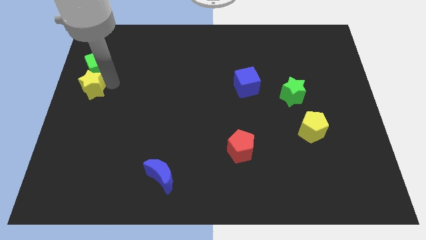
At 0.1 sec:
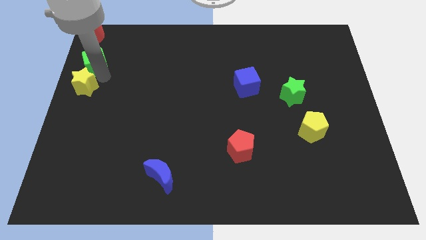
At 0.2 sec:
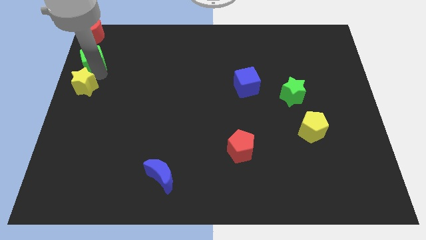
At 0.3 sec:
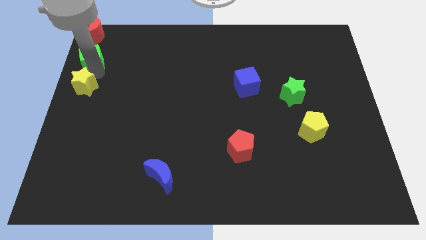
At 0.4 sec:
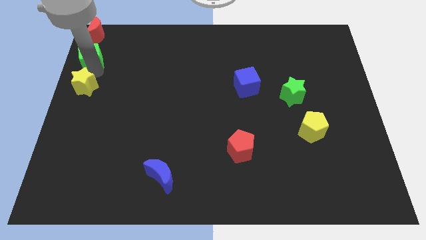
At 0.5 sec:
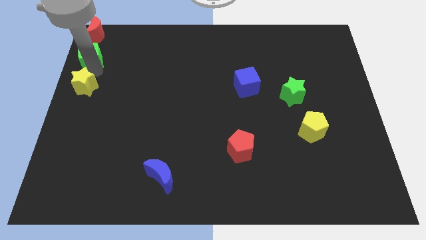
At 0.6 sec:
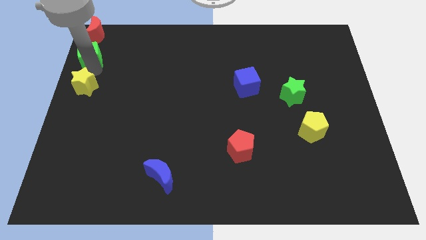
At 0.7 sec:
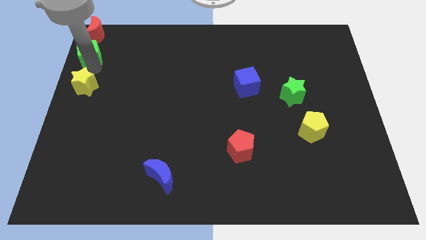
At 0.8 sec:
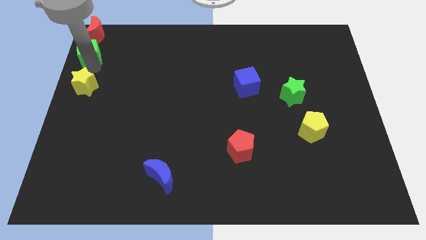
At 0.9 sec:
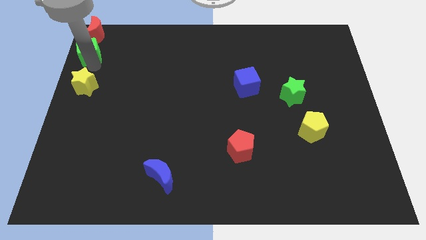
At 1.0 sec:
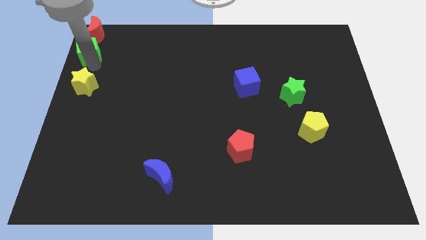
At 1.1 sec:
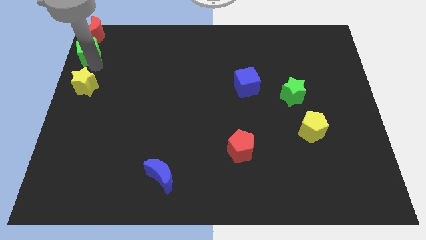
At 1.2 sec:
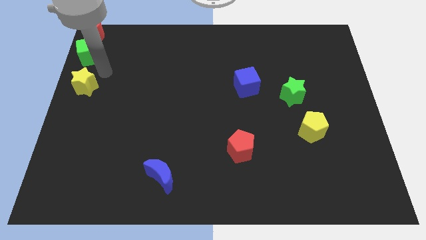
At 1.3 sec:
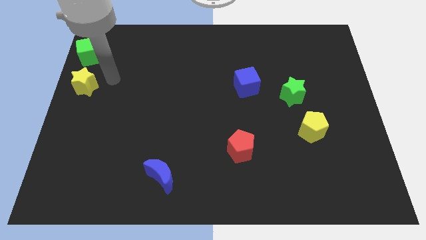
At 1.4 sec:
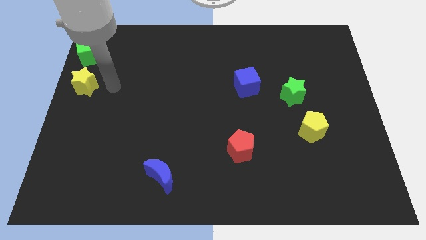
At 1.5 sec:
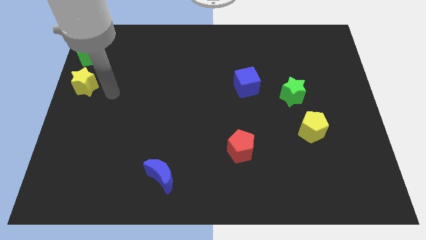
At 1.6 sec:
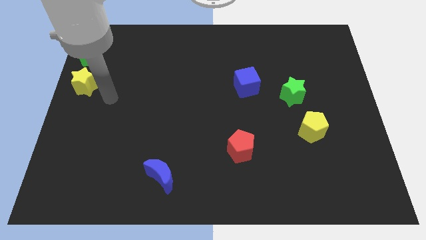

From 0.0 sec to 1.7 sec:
drag the green cube and place it below the red moon

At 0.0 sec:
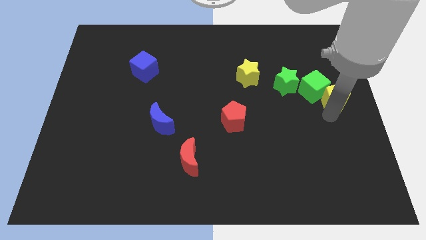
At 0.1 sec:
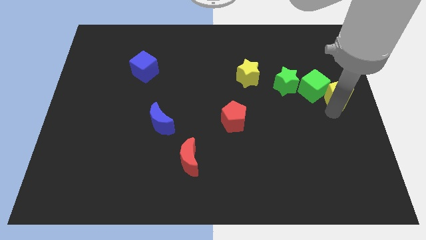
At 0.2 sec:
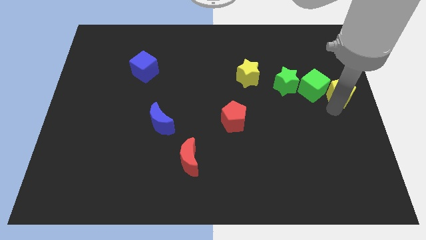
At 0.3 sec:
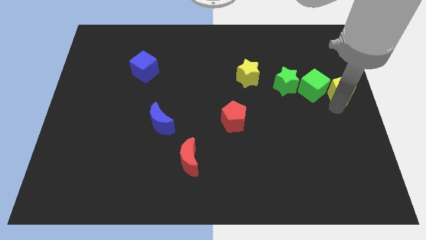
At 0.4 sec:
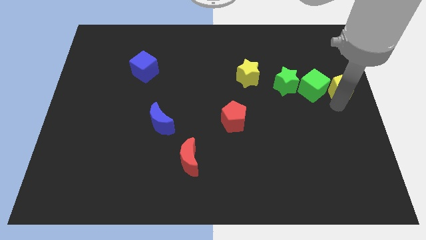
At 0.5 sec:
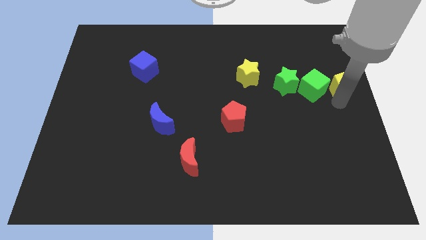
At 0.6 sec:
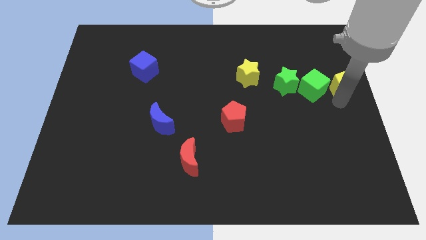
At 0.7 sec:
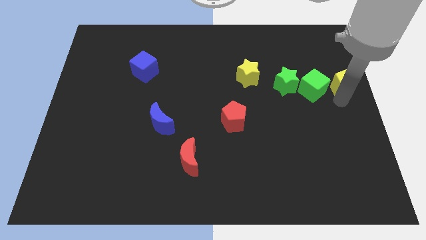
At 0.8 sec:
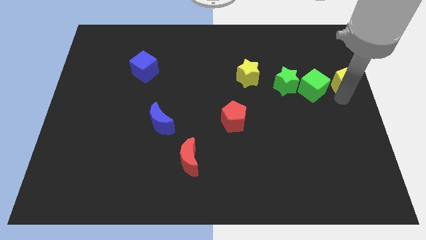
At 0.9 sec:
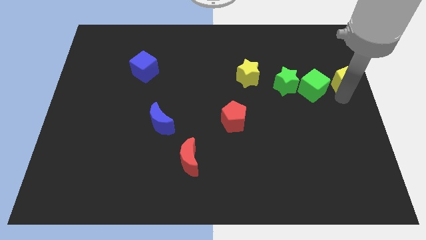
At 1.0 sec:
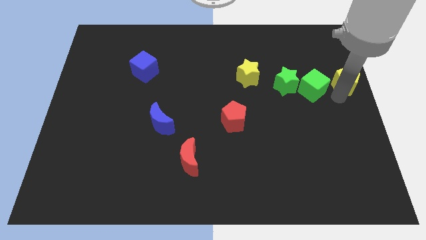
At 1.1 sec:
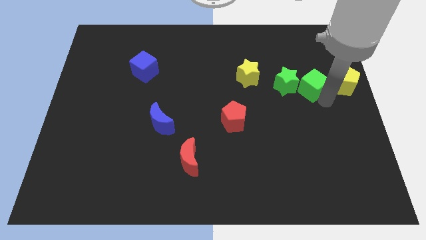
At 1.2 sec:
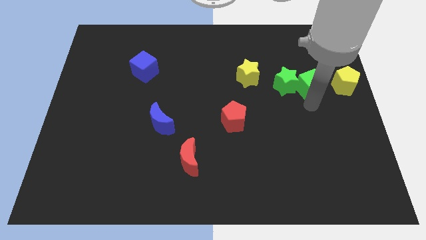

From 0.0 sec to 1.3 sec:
push yellow pentagon upwards a bit

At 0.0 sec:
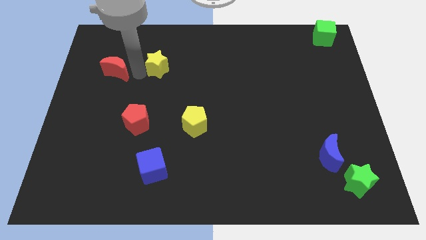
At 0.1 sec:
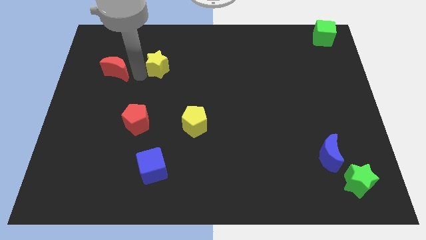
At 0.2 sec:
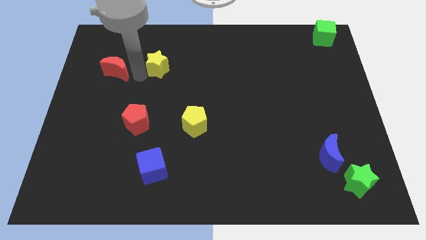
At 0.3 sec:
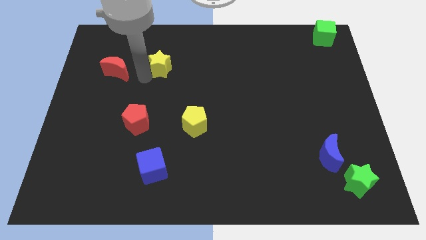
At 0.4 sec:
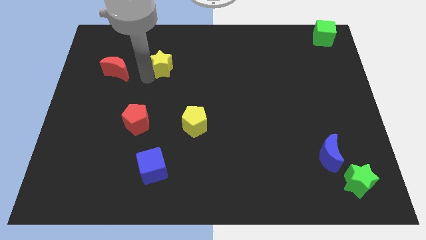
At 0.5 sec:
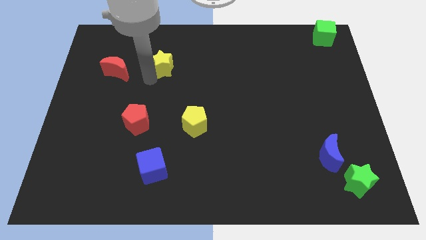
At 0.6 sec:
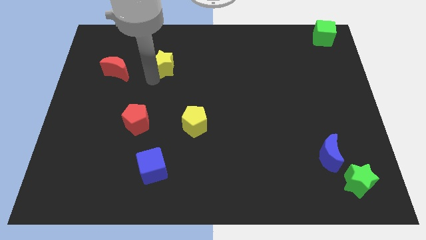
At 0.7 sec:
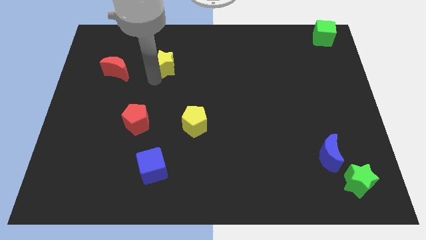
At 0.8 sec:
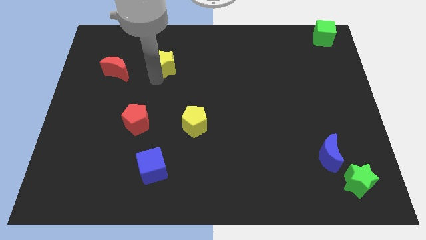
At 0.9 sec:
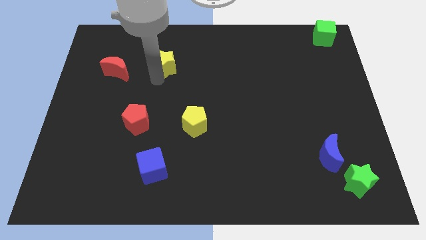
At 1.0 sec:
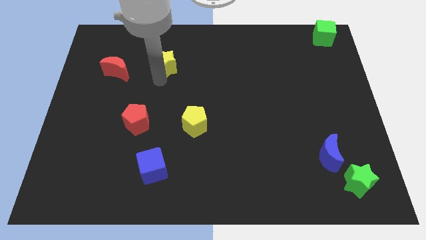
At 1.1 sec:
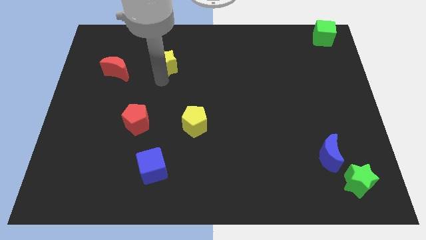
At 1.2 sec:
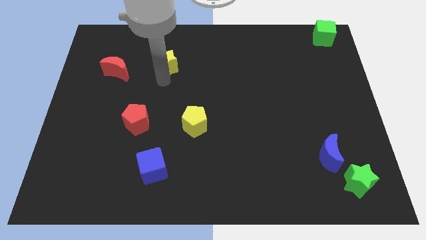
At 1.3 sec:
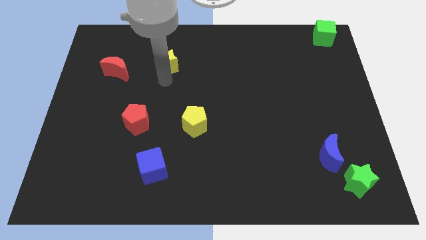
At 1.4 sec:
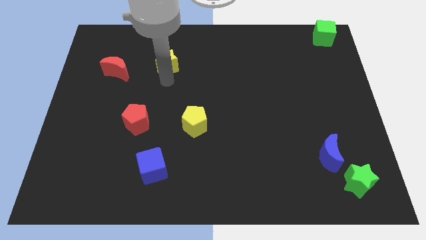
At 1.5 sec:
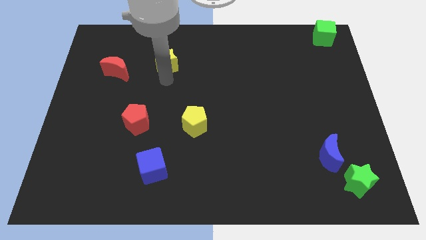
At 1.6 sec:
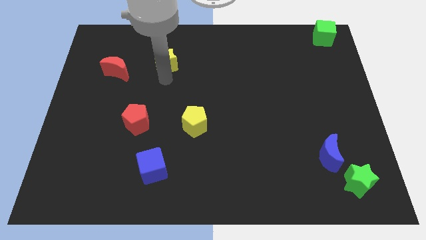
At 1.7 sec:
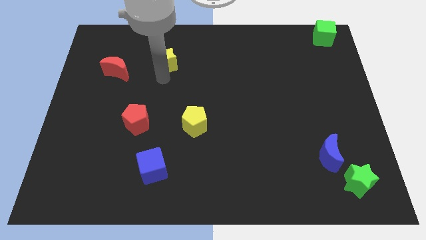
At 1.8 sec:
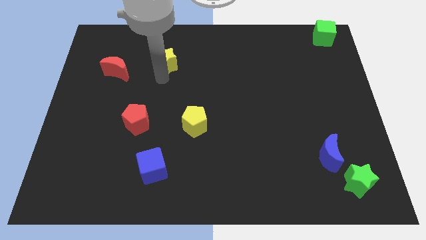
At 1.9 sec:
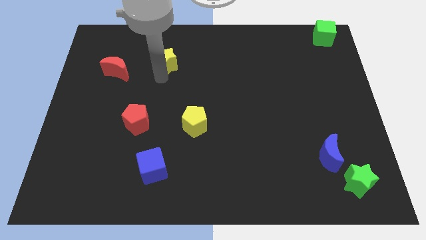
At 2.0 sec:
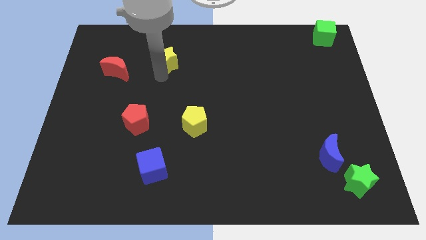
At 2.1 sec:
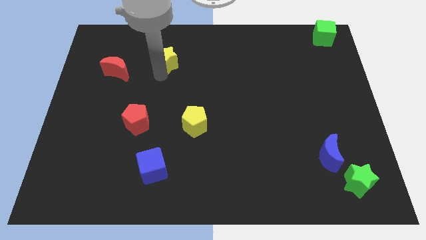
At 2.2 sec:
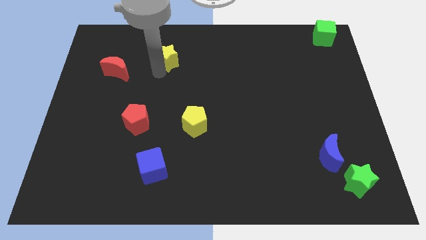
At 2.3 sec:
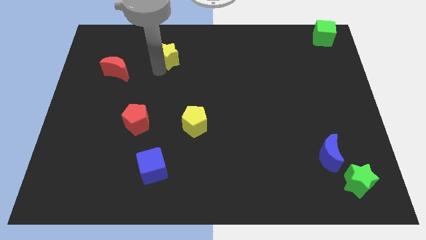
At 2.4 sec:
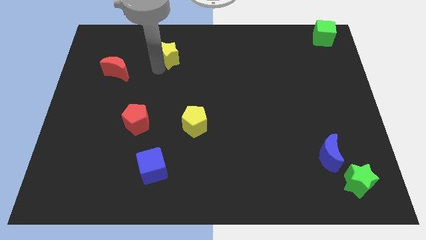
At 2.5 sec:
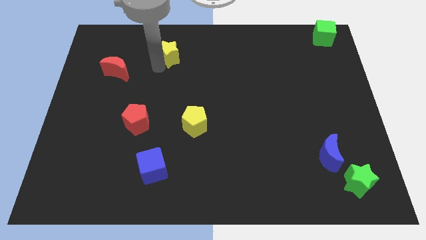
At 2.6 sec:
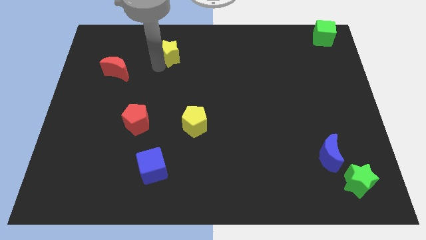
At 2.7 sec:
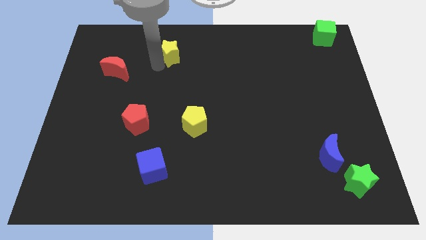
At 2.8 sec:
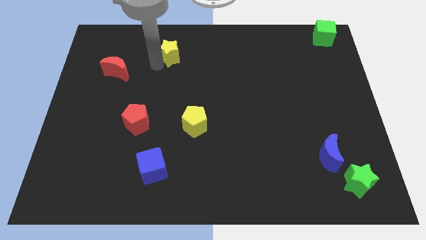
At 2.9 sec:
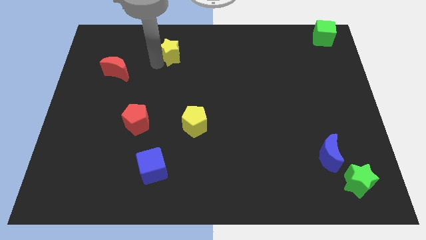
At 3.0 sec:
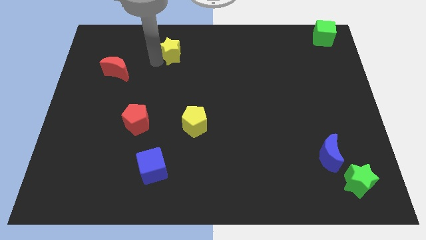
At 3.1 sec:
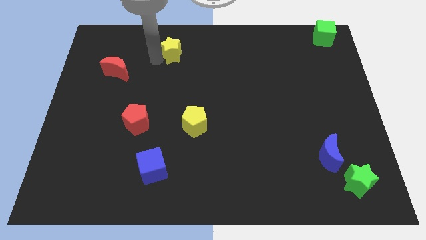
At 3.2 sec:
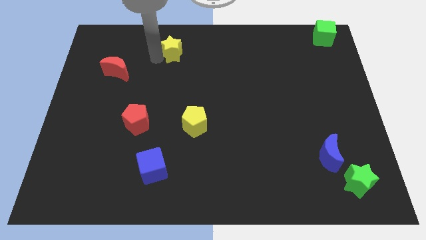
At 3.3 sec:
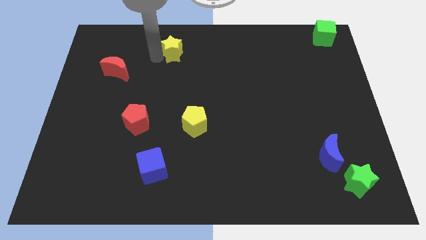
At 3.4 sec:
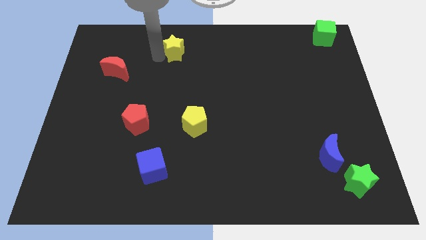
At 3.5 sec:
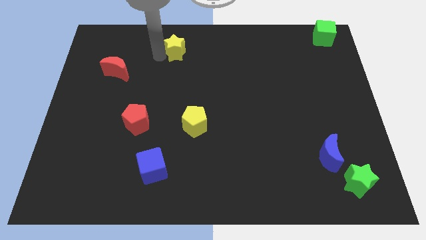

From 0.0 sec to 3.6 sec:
push yellow star upwards to the top

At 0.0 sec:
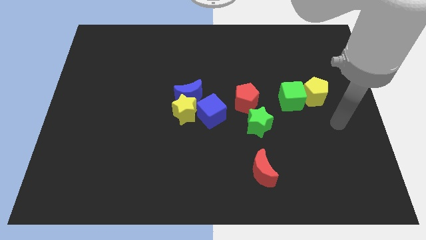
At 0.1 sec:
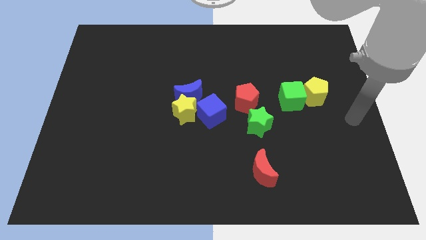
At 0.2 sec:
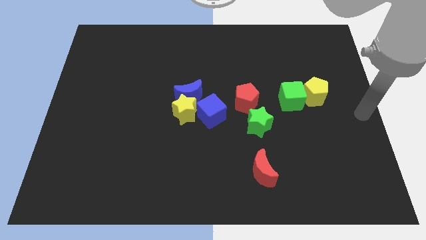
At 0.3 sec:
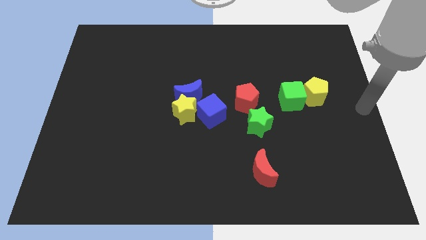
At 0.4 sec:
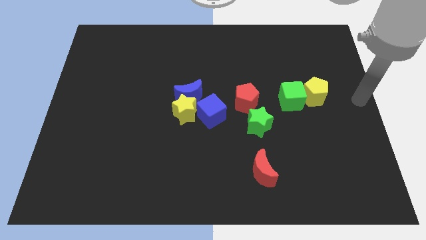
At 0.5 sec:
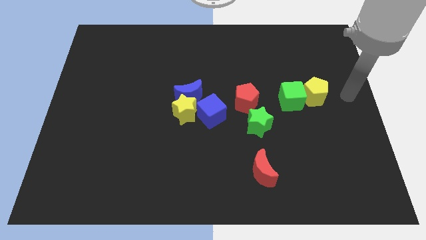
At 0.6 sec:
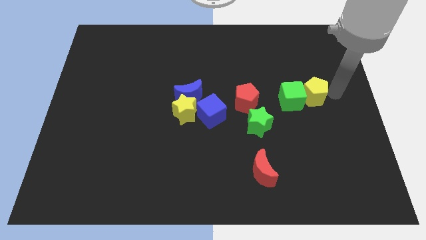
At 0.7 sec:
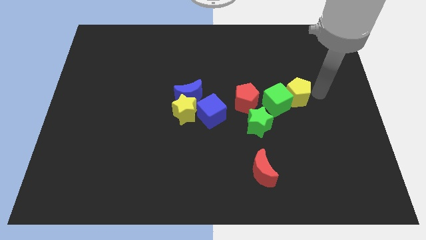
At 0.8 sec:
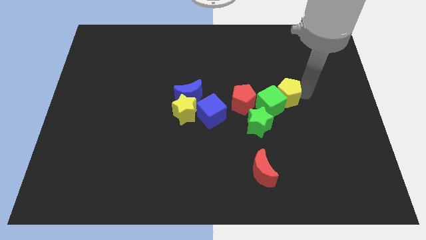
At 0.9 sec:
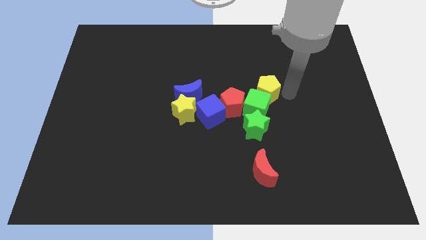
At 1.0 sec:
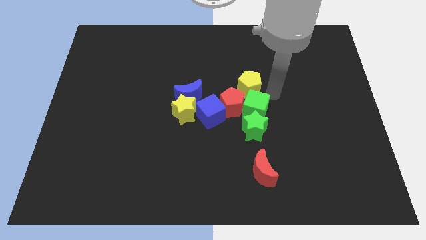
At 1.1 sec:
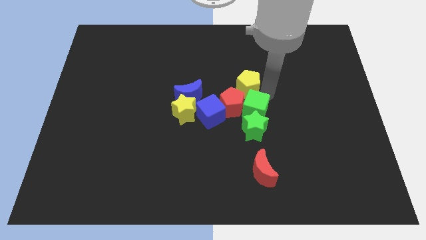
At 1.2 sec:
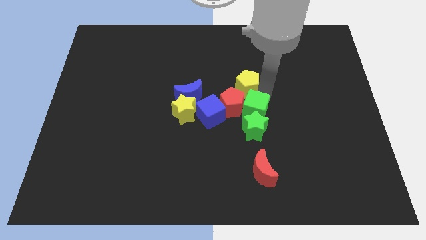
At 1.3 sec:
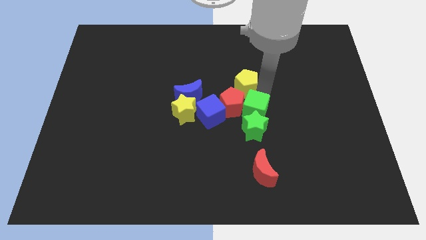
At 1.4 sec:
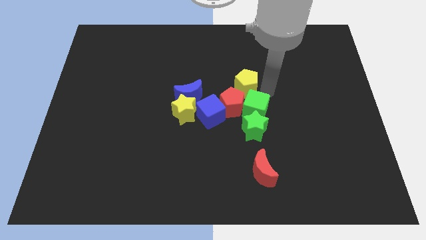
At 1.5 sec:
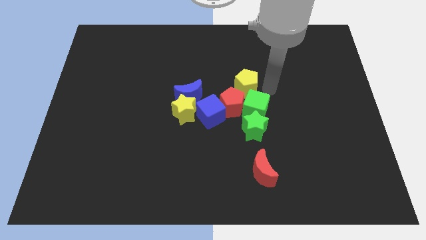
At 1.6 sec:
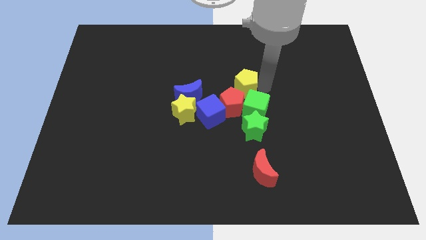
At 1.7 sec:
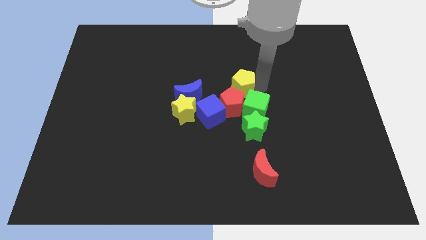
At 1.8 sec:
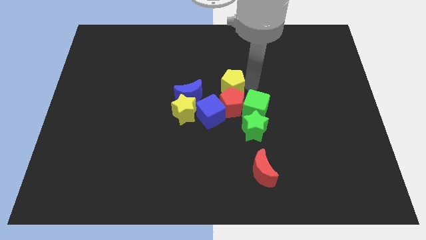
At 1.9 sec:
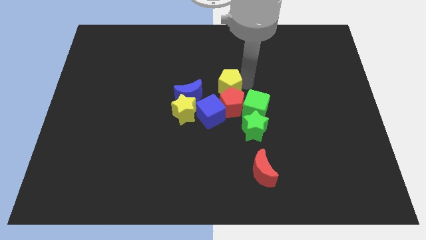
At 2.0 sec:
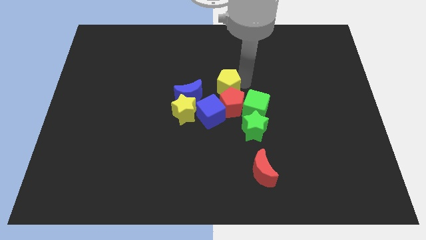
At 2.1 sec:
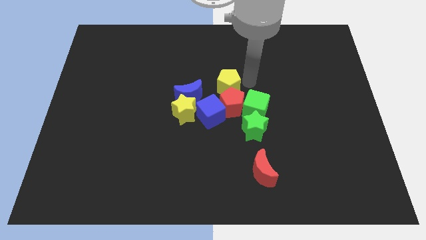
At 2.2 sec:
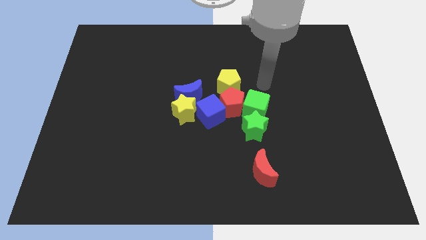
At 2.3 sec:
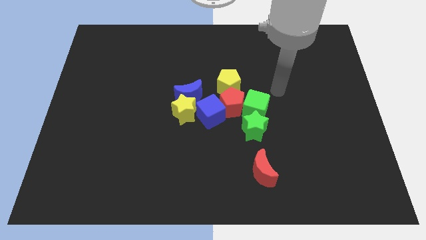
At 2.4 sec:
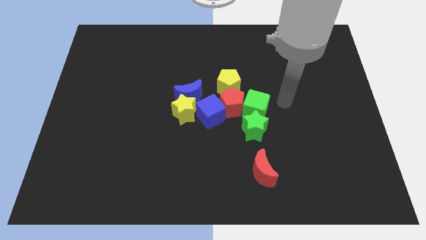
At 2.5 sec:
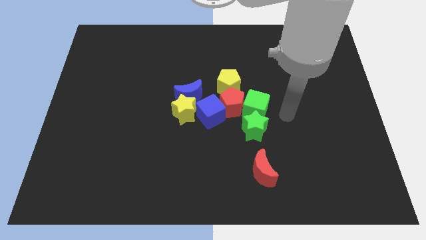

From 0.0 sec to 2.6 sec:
place the yellow pentagon above the red pentagon
